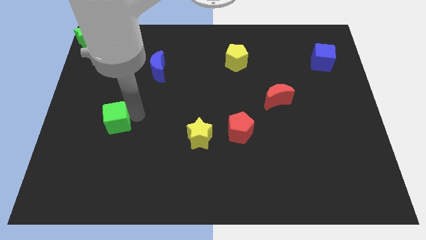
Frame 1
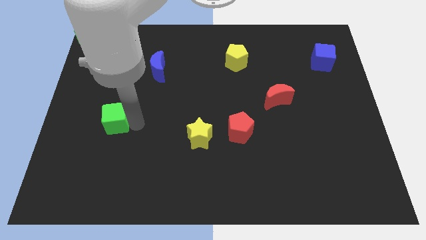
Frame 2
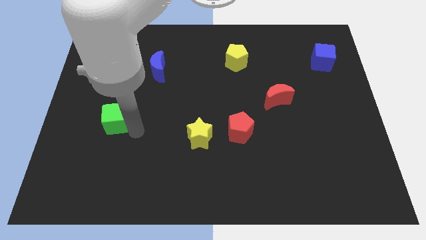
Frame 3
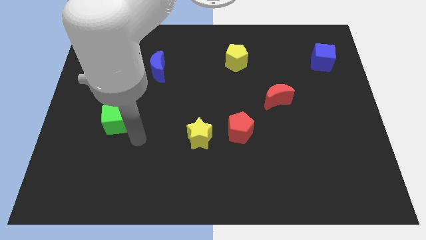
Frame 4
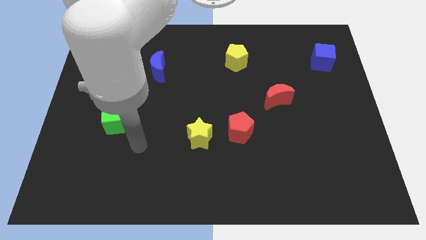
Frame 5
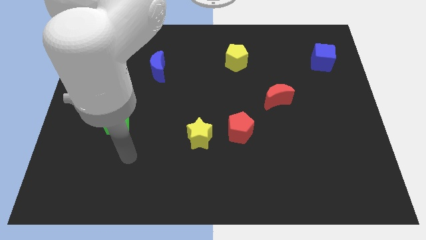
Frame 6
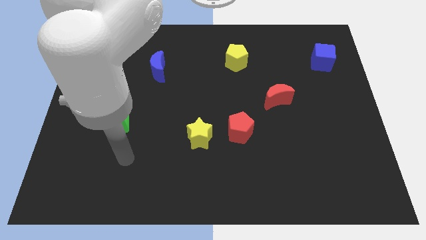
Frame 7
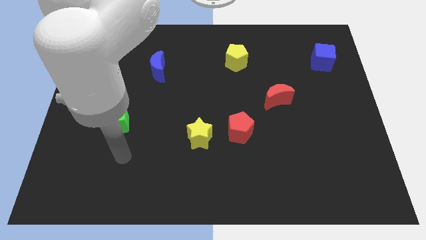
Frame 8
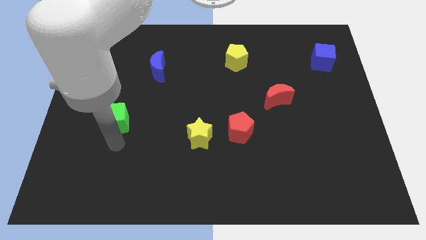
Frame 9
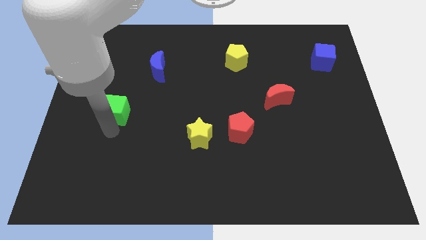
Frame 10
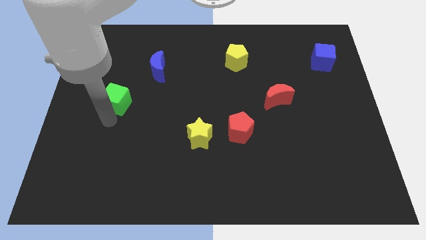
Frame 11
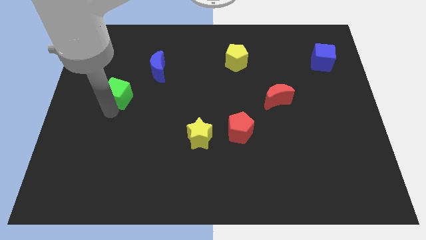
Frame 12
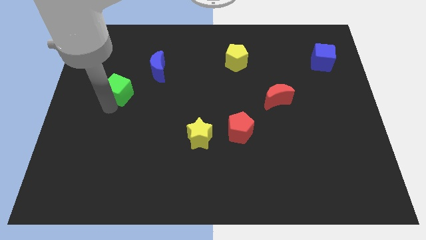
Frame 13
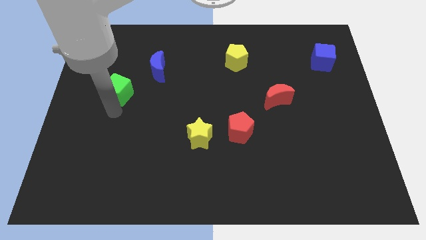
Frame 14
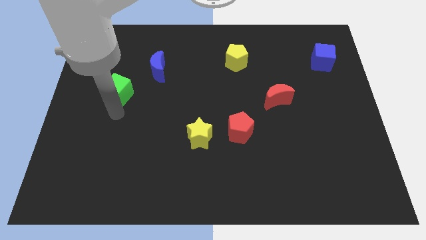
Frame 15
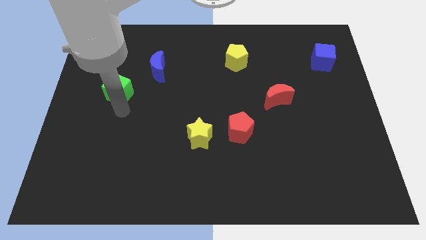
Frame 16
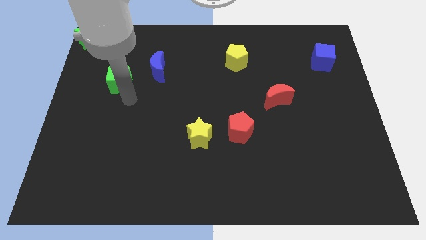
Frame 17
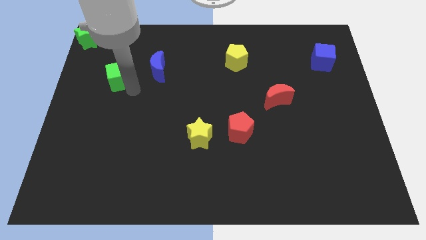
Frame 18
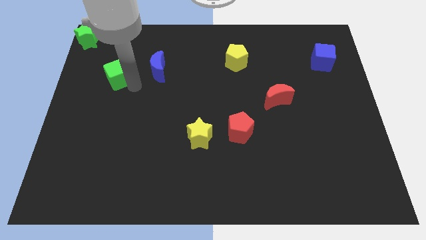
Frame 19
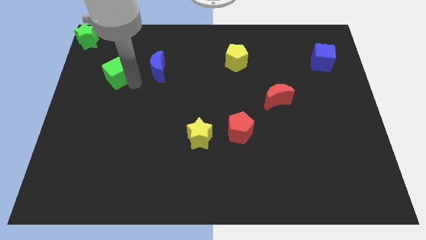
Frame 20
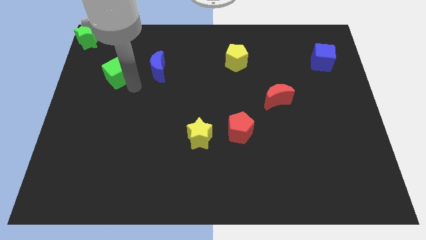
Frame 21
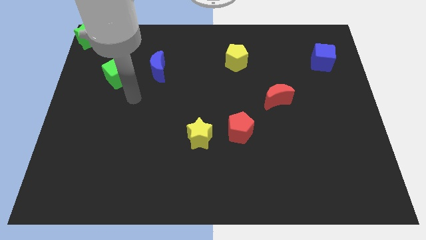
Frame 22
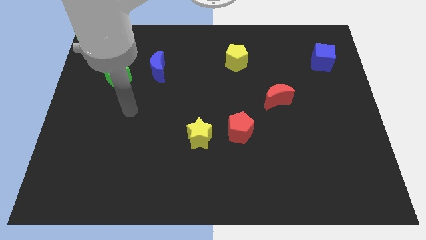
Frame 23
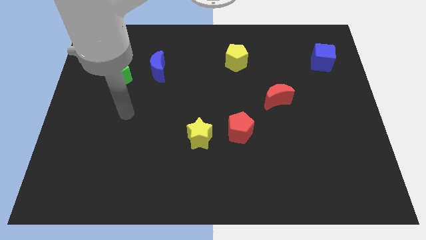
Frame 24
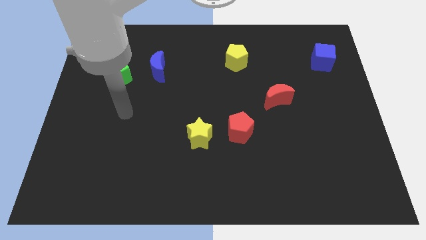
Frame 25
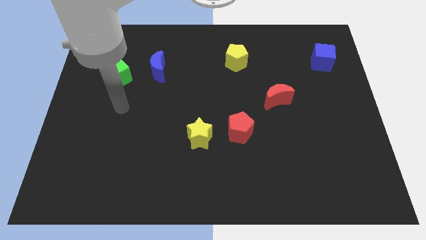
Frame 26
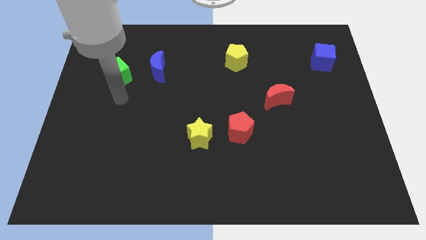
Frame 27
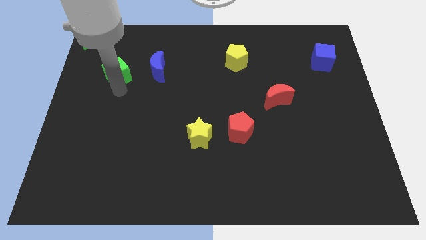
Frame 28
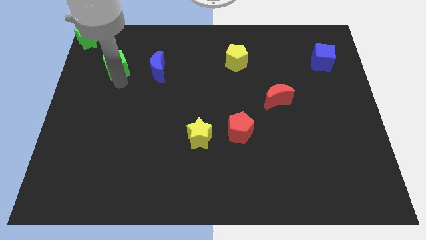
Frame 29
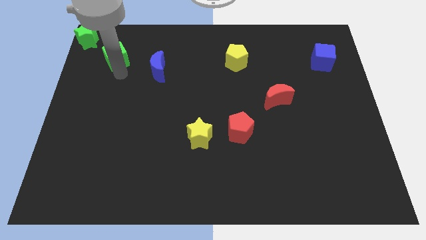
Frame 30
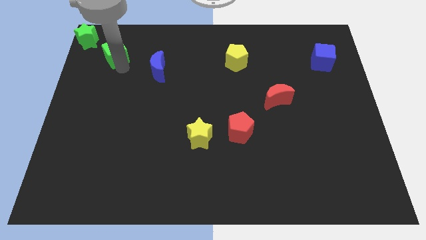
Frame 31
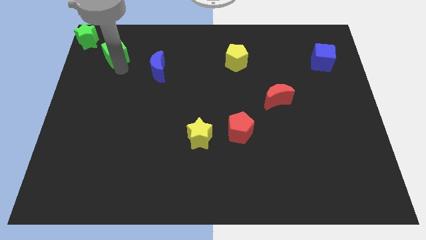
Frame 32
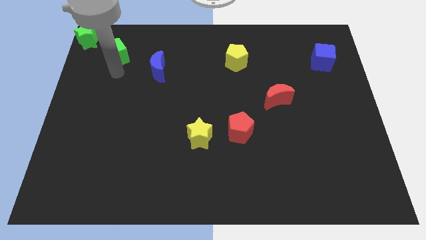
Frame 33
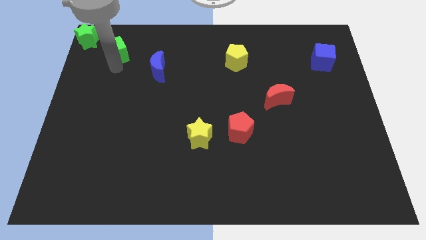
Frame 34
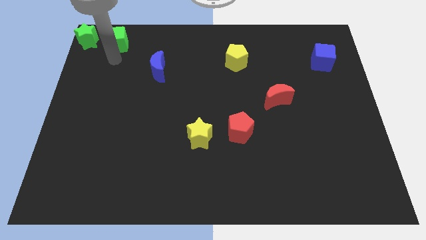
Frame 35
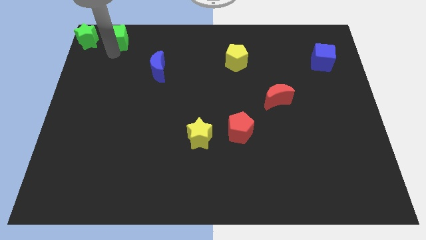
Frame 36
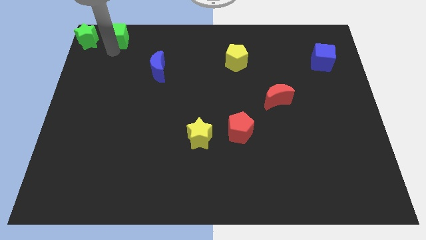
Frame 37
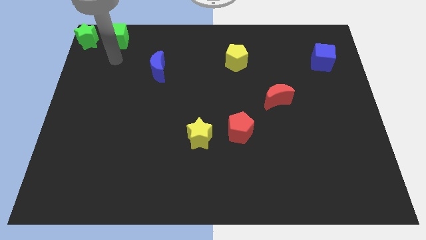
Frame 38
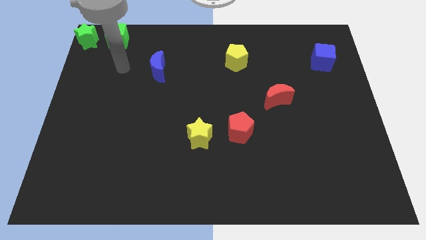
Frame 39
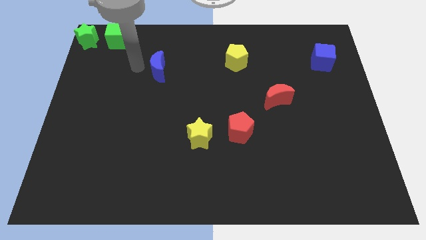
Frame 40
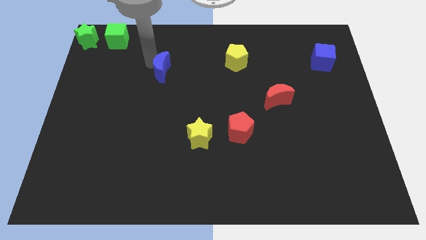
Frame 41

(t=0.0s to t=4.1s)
place green cube to the right of green star

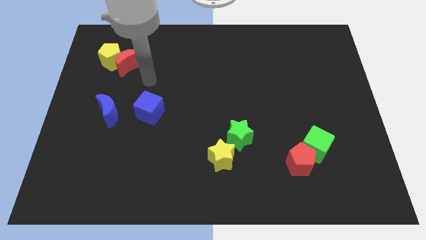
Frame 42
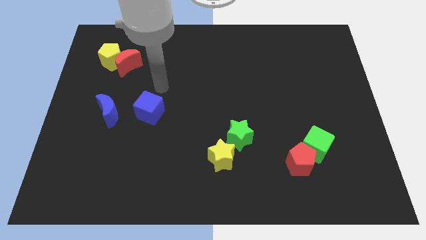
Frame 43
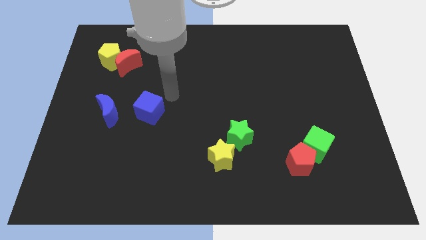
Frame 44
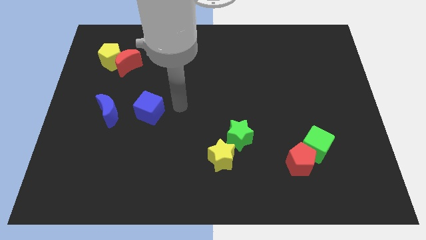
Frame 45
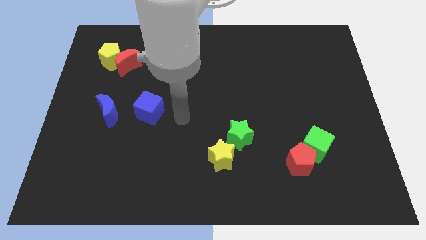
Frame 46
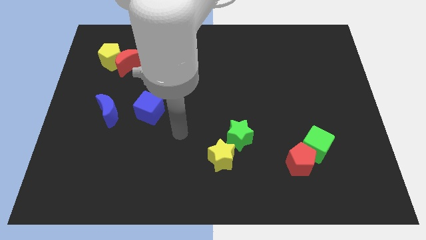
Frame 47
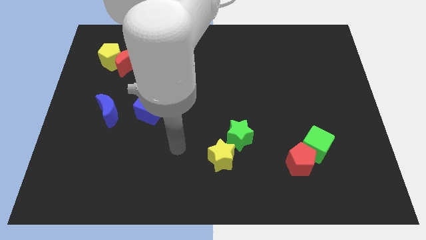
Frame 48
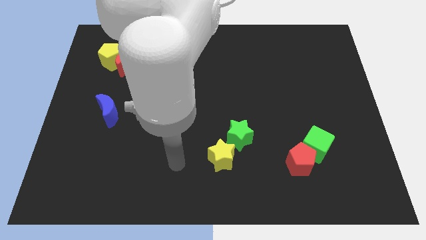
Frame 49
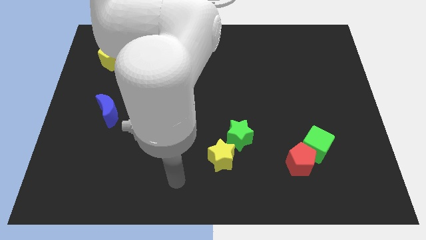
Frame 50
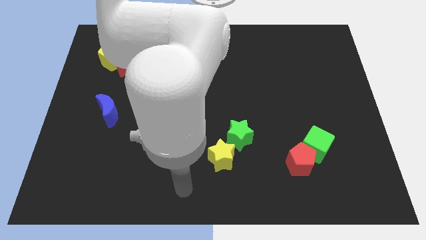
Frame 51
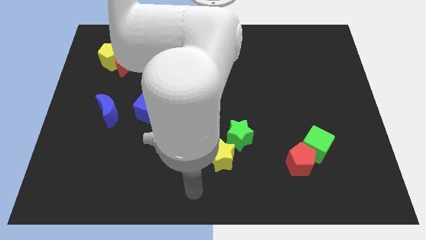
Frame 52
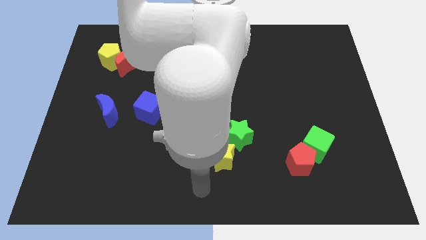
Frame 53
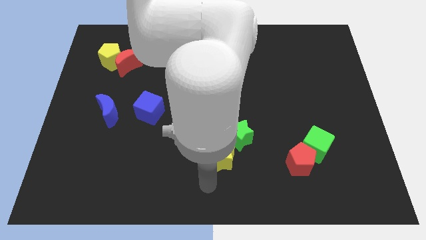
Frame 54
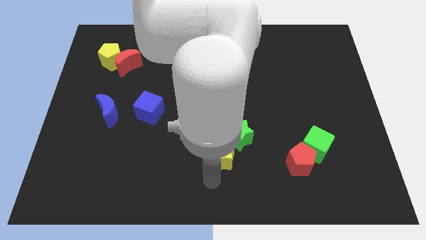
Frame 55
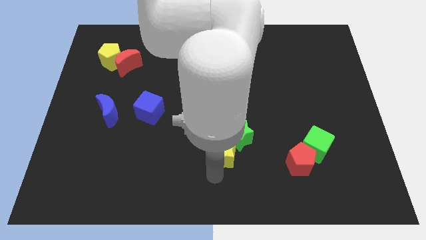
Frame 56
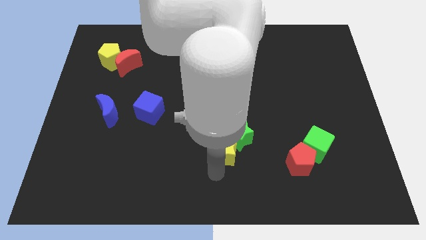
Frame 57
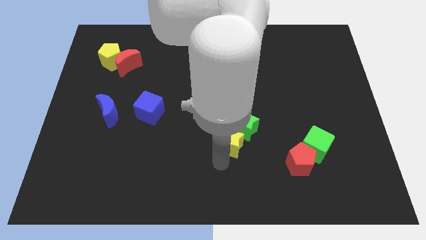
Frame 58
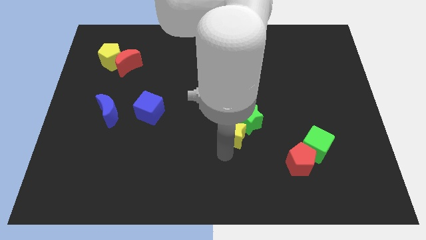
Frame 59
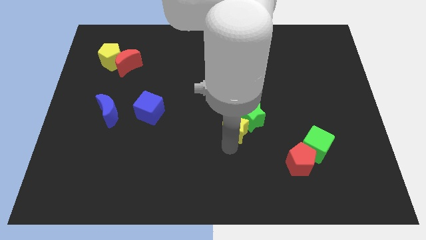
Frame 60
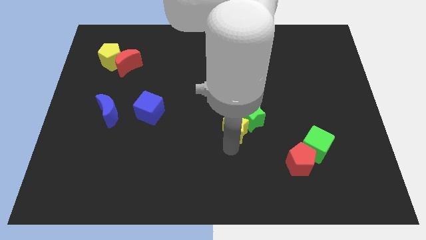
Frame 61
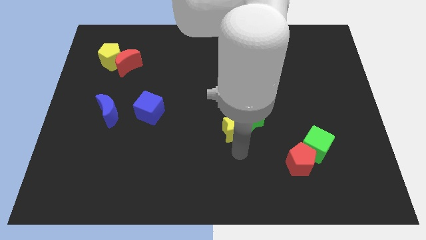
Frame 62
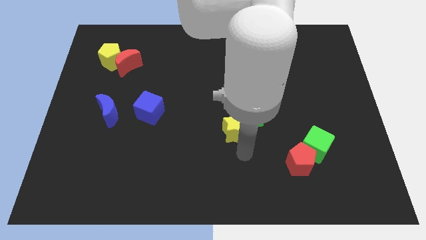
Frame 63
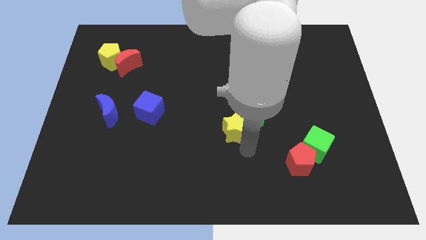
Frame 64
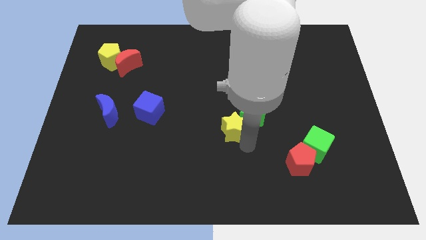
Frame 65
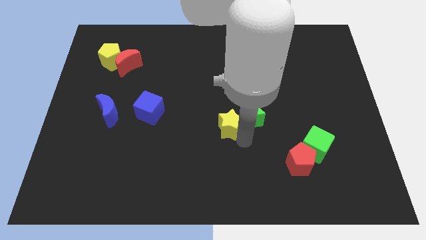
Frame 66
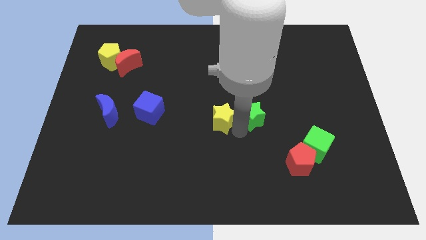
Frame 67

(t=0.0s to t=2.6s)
point your arm between yellow star and green star

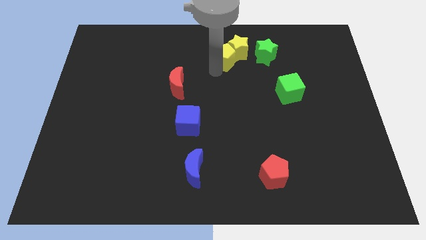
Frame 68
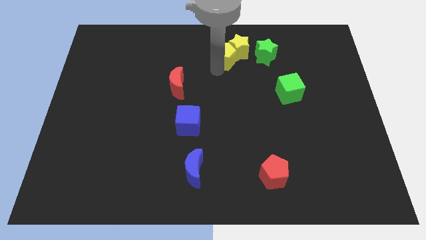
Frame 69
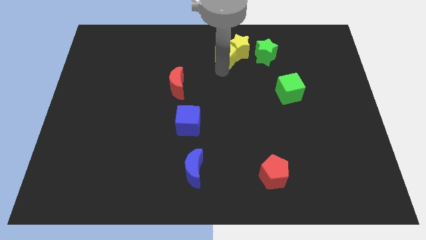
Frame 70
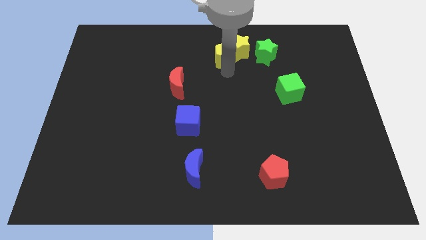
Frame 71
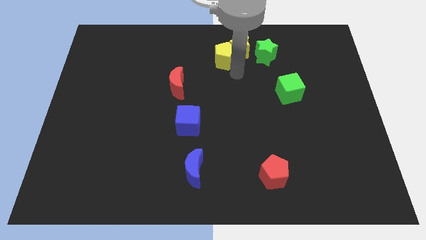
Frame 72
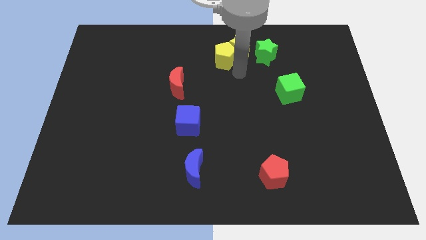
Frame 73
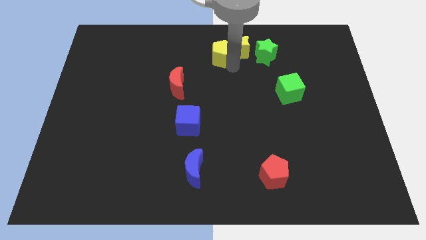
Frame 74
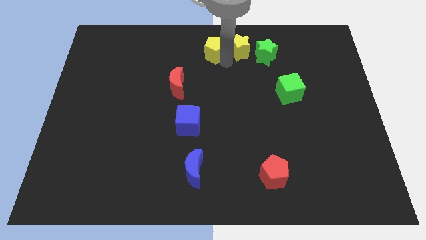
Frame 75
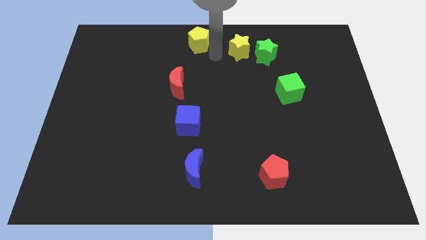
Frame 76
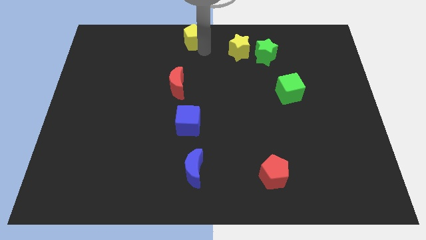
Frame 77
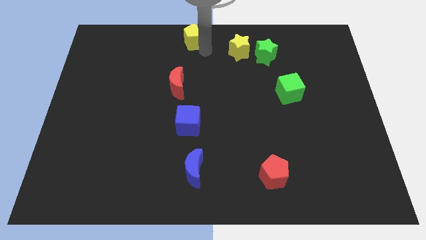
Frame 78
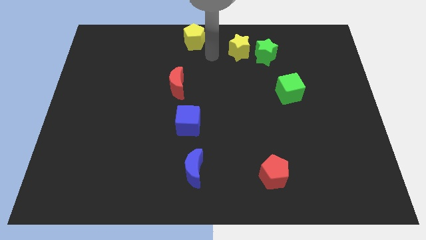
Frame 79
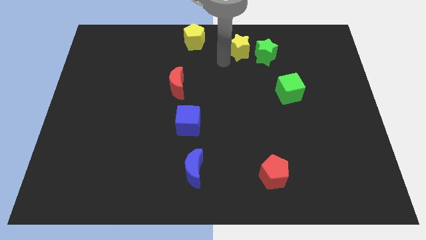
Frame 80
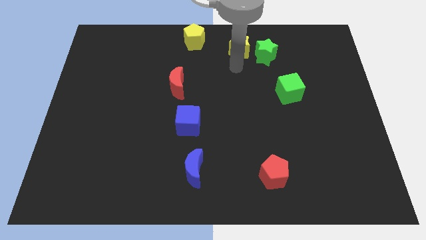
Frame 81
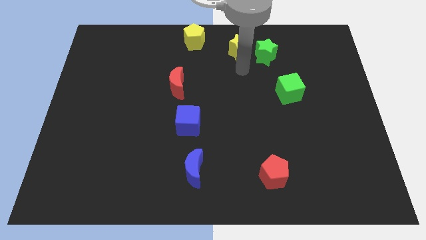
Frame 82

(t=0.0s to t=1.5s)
separate the yellow blocks from each other

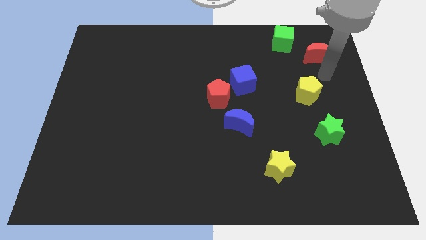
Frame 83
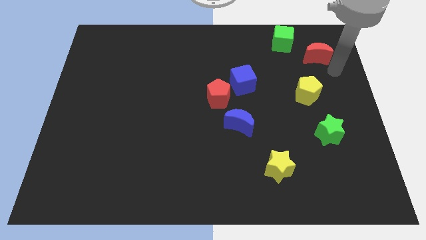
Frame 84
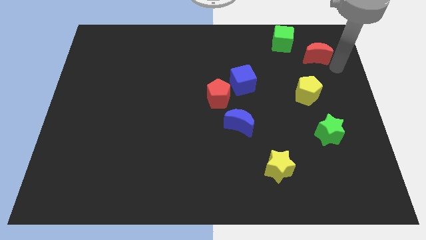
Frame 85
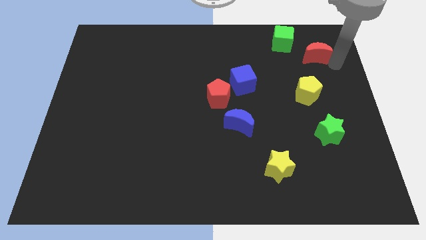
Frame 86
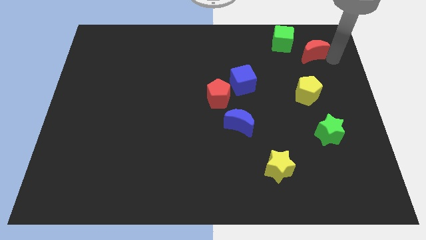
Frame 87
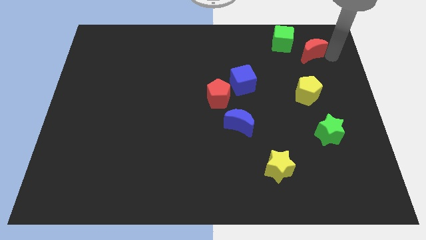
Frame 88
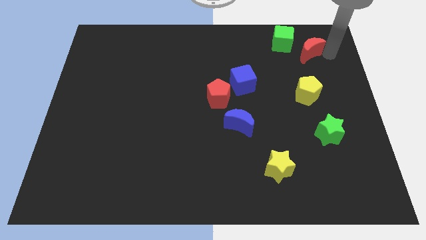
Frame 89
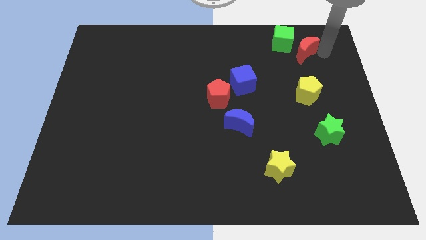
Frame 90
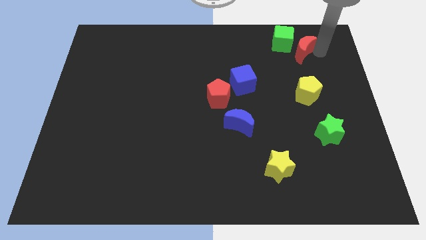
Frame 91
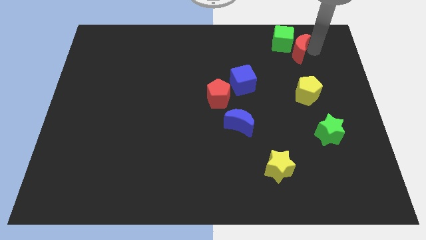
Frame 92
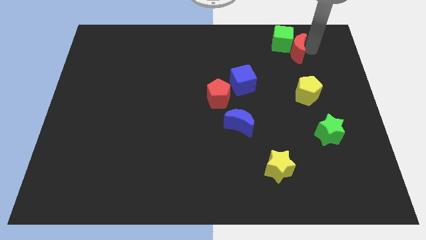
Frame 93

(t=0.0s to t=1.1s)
push red moon into green cube
